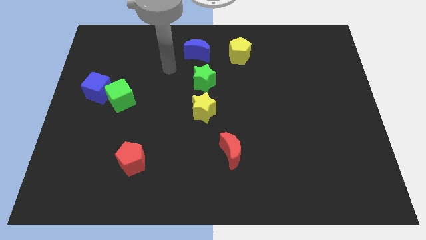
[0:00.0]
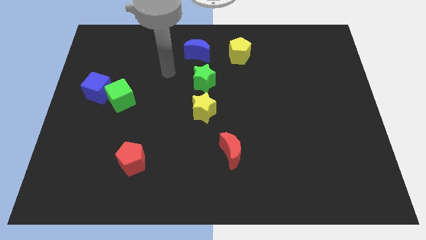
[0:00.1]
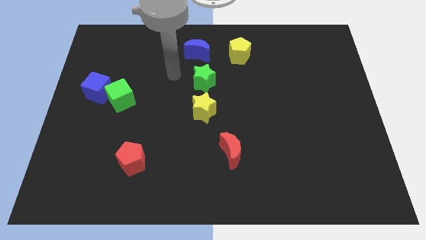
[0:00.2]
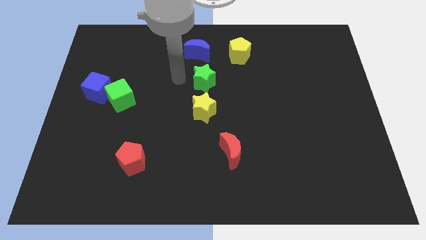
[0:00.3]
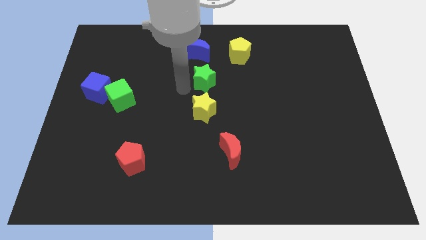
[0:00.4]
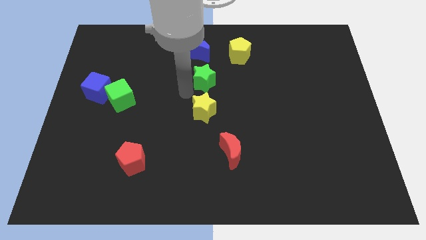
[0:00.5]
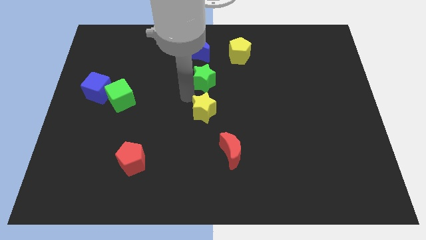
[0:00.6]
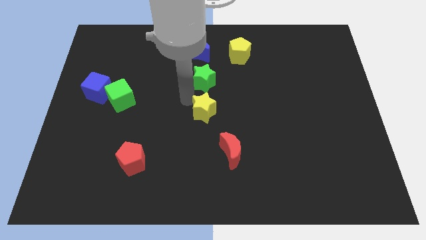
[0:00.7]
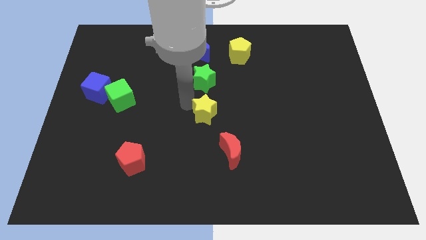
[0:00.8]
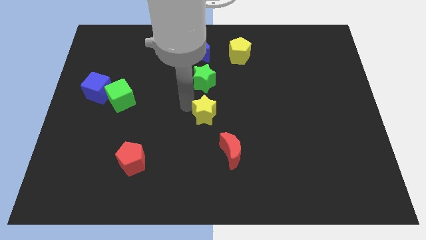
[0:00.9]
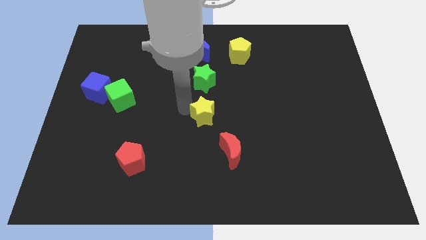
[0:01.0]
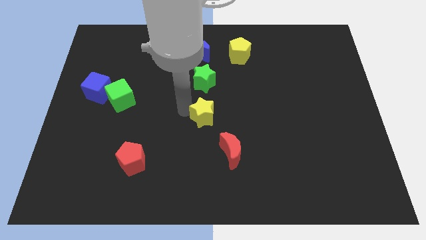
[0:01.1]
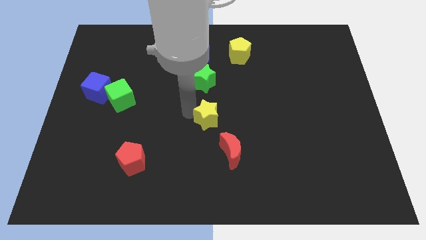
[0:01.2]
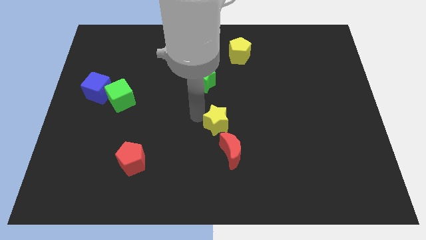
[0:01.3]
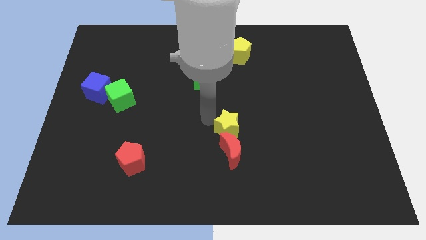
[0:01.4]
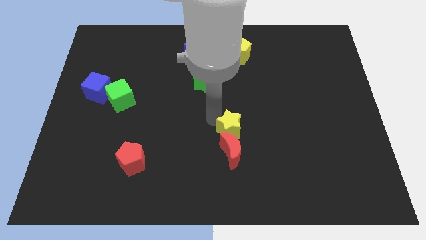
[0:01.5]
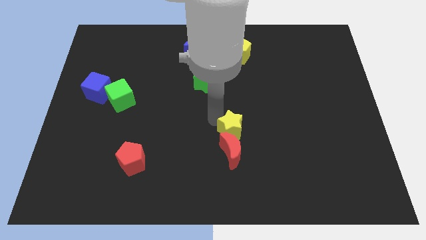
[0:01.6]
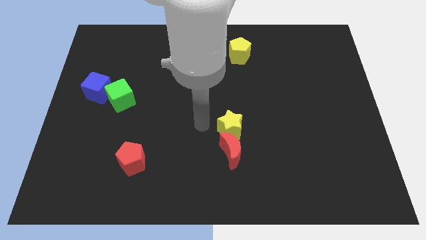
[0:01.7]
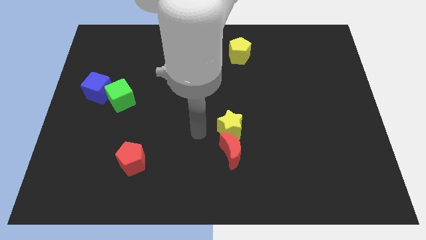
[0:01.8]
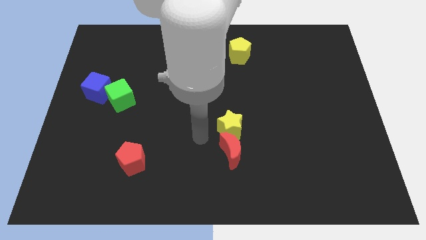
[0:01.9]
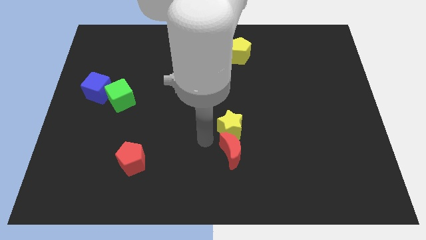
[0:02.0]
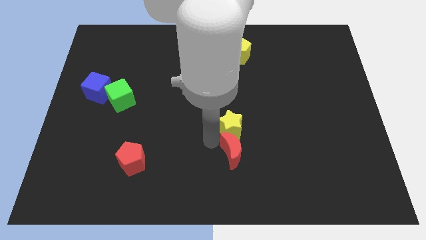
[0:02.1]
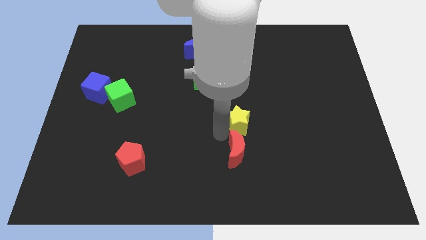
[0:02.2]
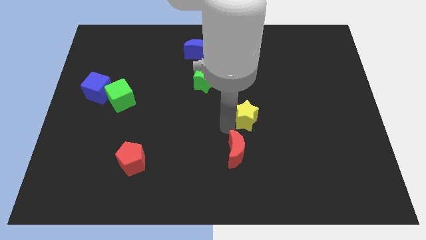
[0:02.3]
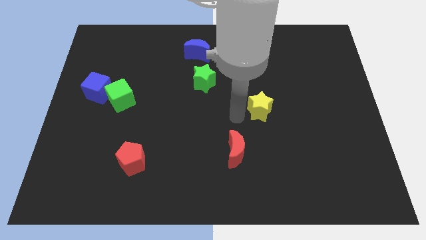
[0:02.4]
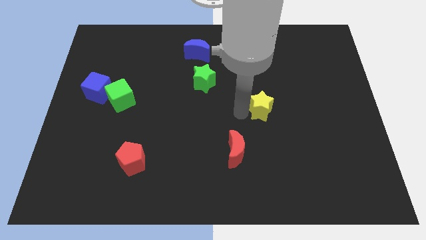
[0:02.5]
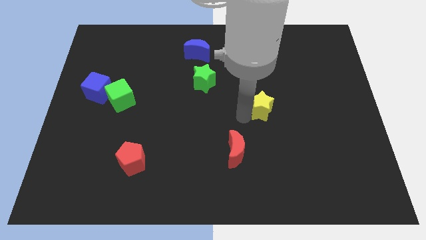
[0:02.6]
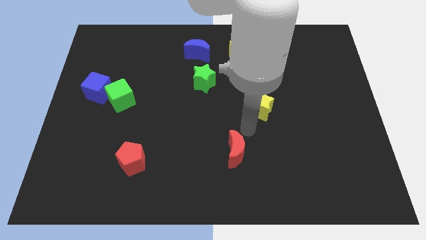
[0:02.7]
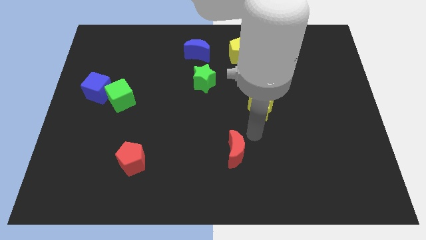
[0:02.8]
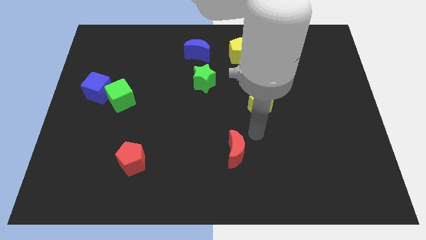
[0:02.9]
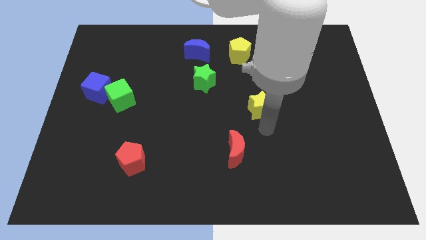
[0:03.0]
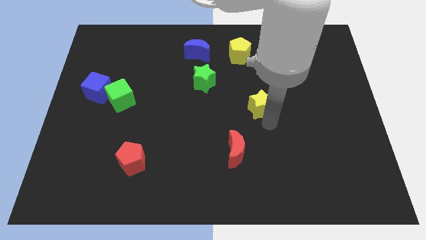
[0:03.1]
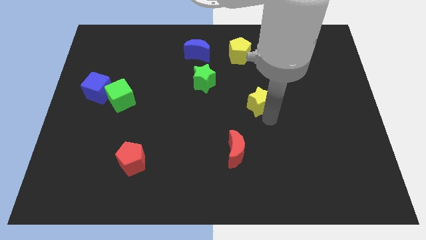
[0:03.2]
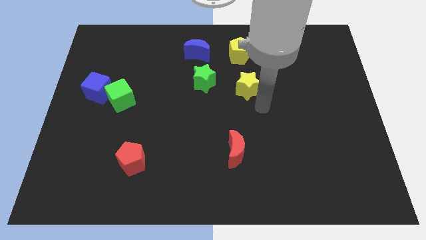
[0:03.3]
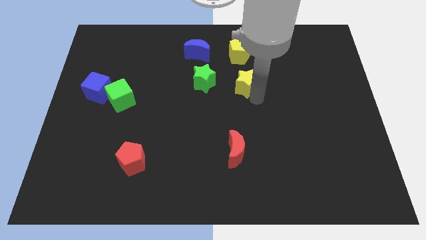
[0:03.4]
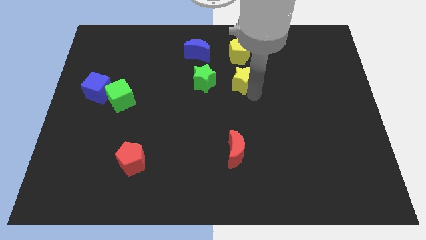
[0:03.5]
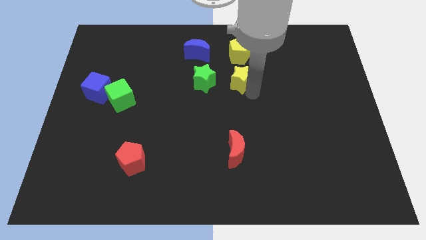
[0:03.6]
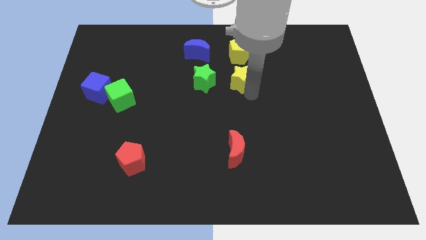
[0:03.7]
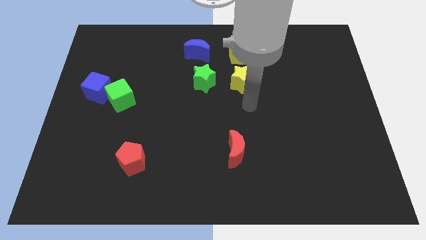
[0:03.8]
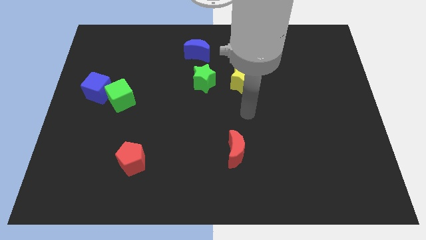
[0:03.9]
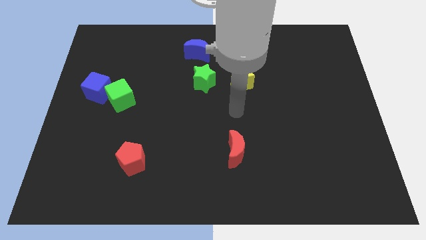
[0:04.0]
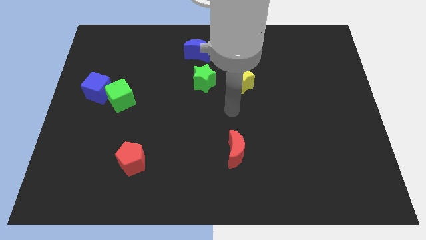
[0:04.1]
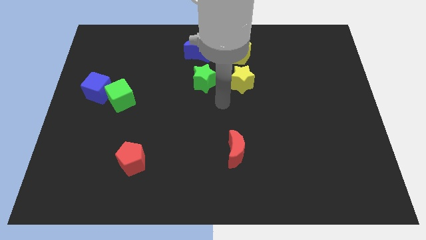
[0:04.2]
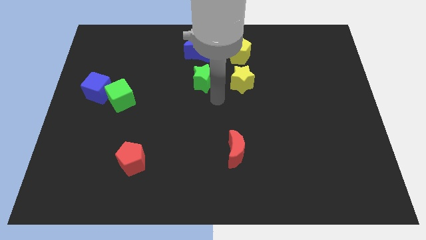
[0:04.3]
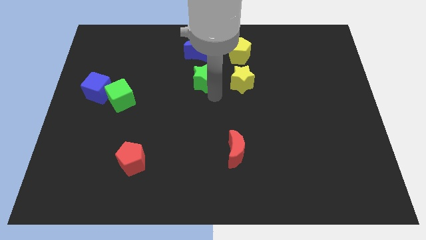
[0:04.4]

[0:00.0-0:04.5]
place the yellow star to the right of the green star

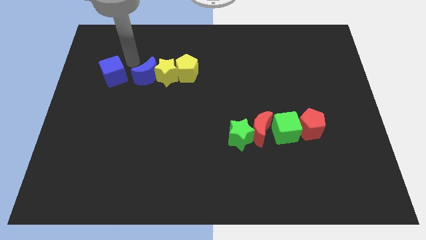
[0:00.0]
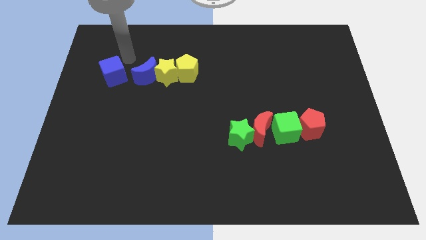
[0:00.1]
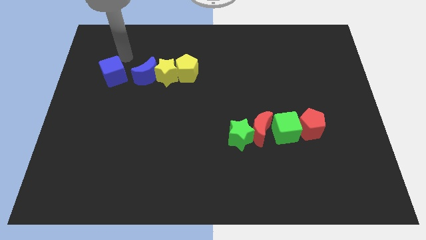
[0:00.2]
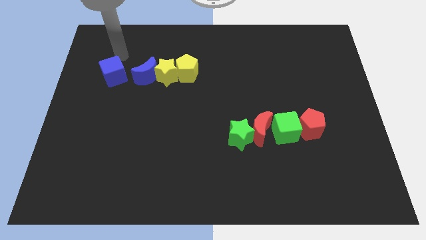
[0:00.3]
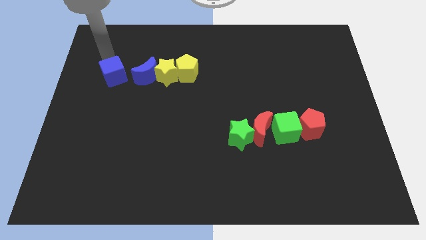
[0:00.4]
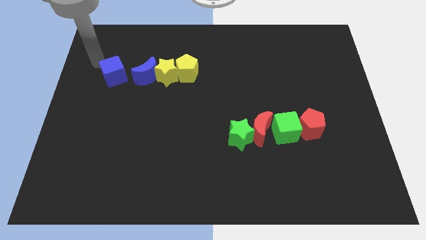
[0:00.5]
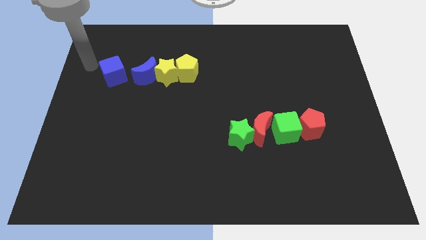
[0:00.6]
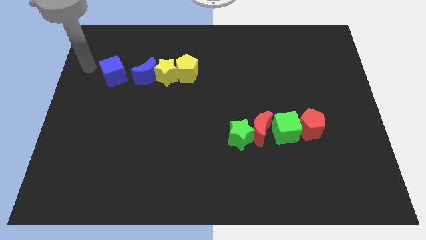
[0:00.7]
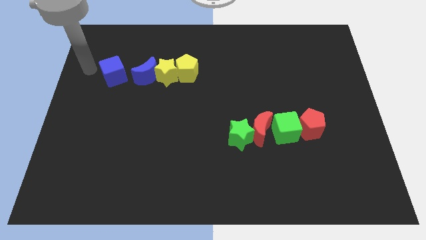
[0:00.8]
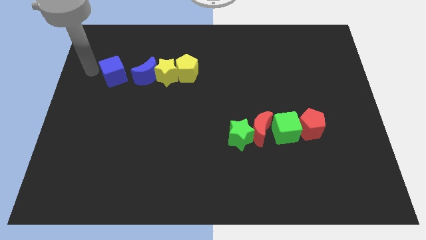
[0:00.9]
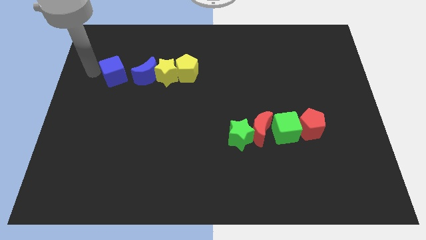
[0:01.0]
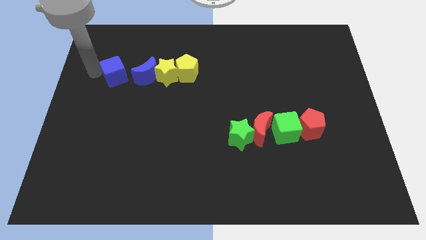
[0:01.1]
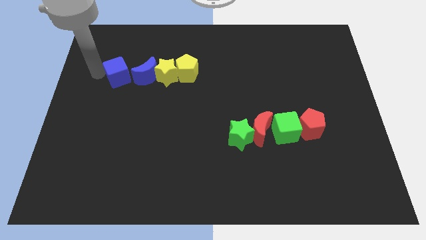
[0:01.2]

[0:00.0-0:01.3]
move your arm into the blue cube

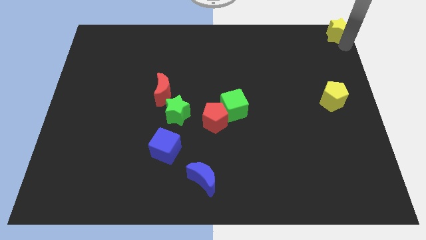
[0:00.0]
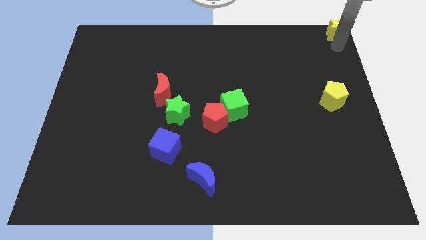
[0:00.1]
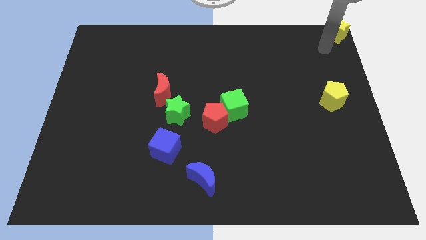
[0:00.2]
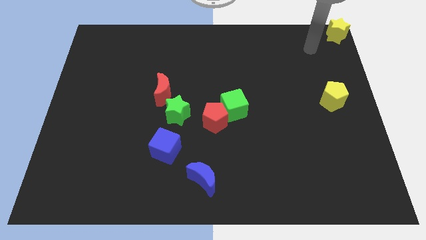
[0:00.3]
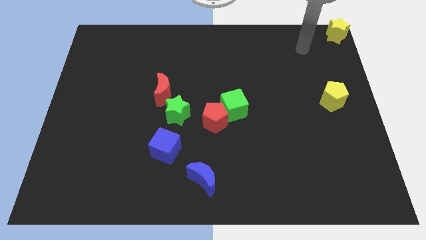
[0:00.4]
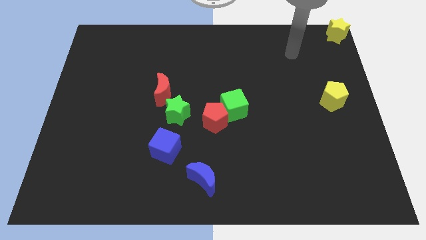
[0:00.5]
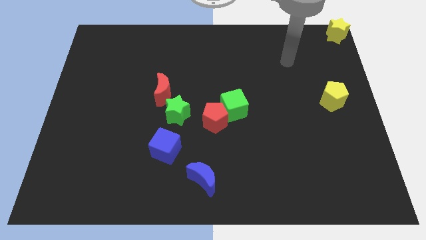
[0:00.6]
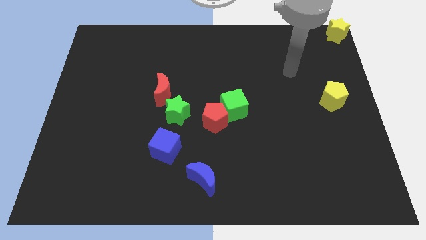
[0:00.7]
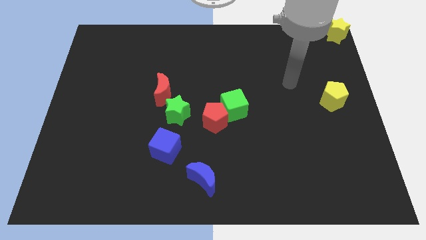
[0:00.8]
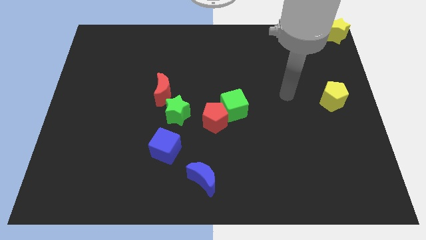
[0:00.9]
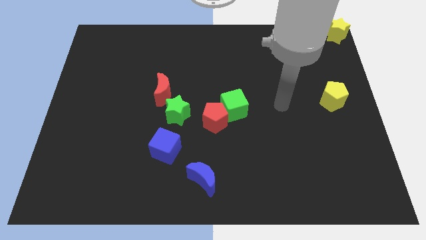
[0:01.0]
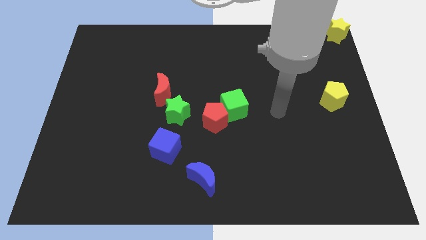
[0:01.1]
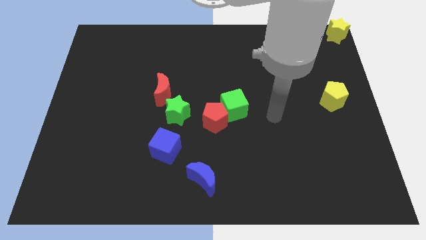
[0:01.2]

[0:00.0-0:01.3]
go away from the yellow star

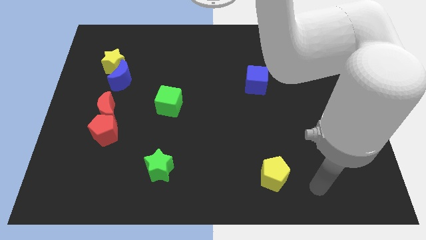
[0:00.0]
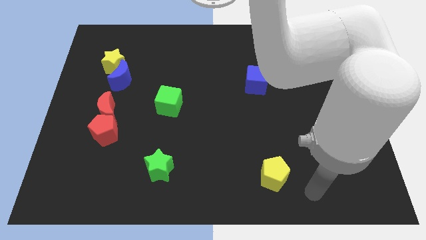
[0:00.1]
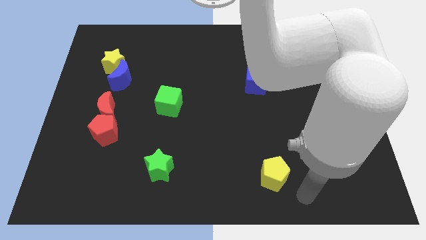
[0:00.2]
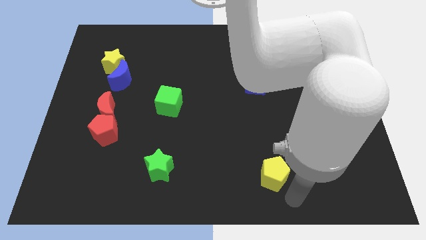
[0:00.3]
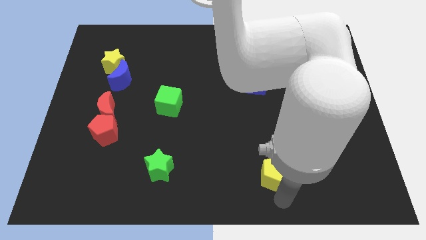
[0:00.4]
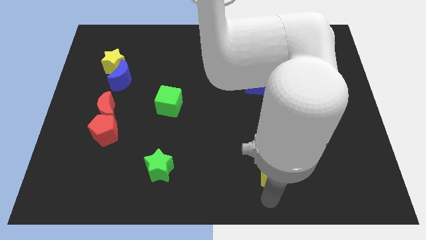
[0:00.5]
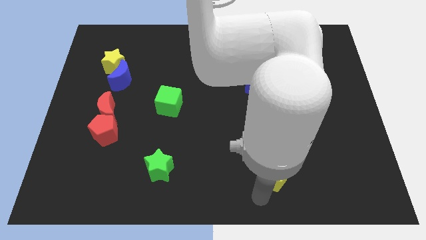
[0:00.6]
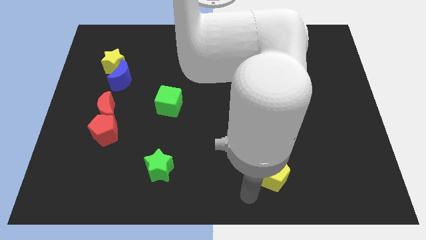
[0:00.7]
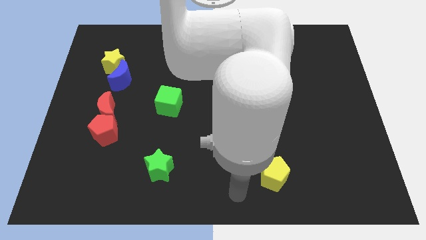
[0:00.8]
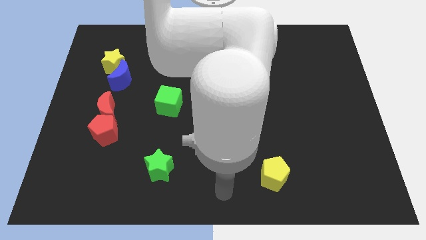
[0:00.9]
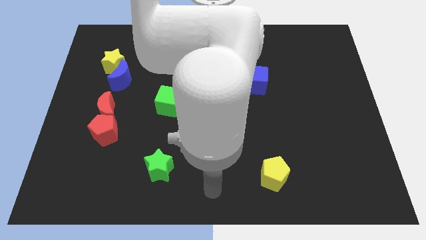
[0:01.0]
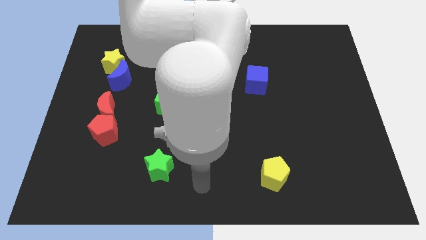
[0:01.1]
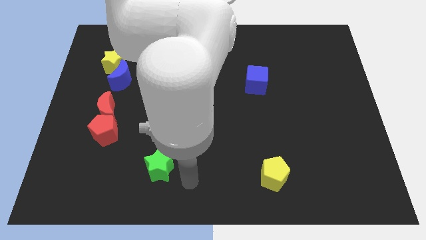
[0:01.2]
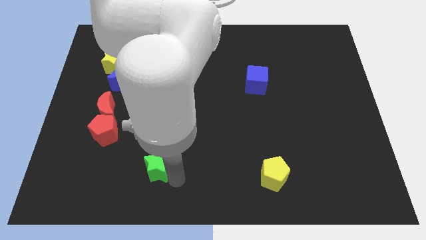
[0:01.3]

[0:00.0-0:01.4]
move your arm to the right side of the green star

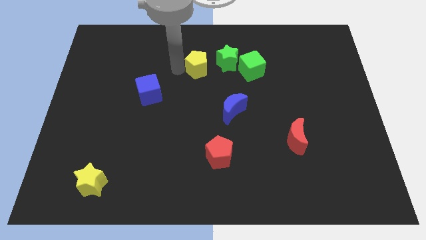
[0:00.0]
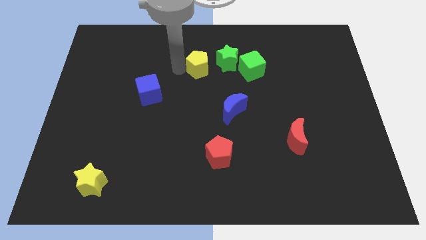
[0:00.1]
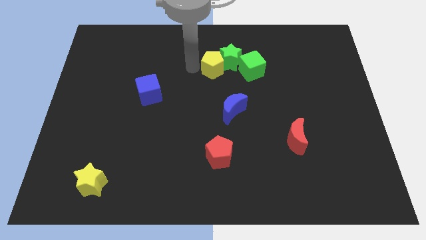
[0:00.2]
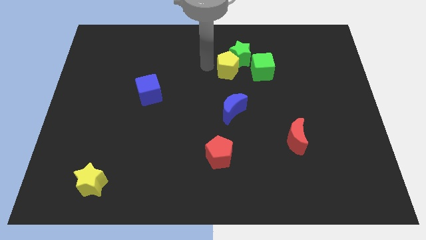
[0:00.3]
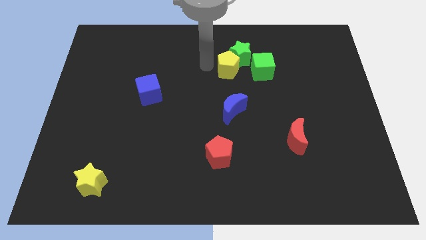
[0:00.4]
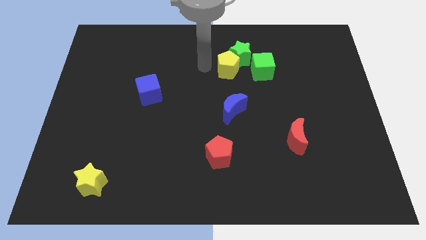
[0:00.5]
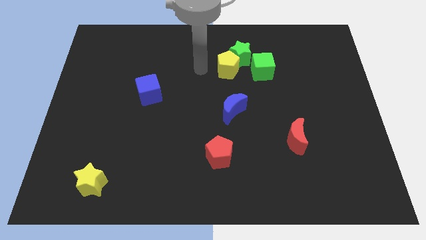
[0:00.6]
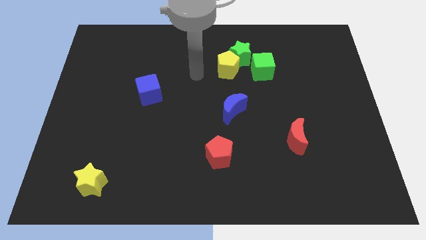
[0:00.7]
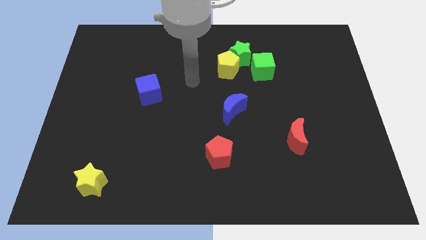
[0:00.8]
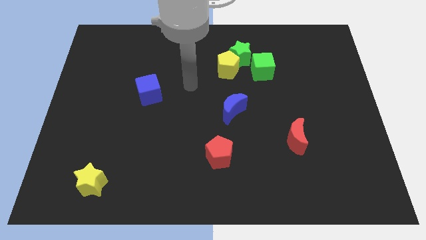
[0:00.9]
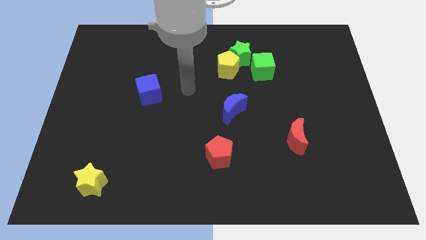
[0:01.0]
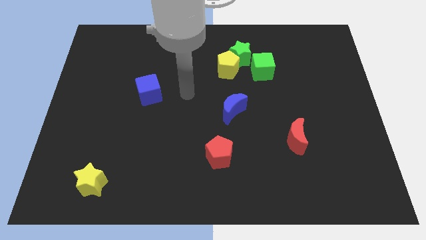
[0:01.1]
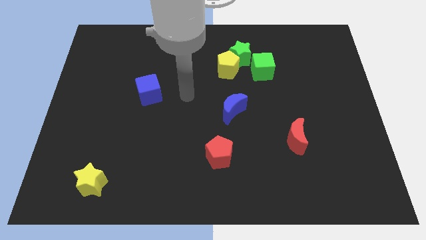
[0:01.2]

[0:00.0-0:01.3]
push the yellow pentagon into the green star
